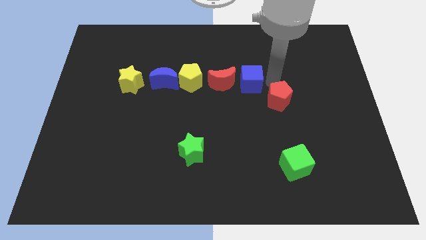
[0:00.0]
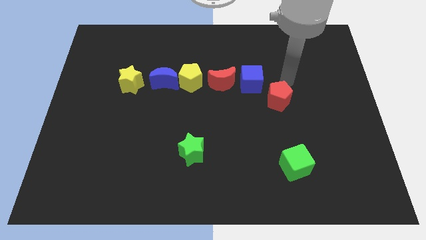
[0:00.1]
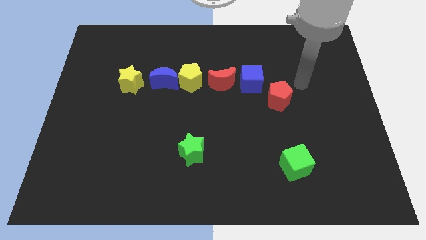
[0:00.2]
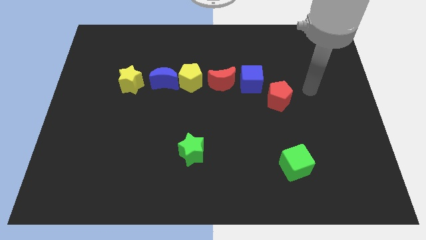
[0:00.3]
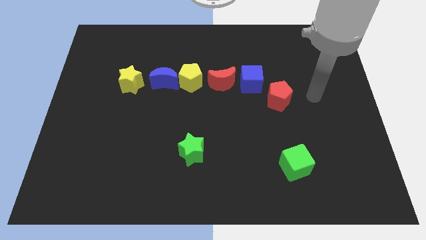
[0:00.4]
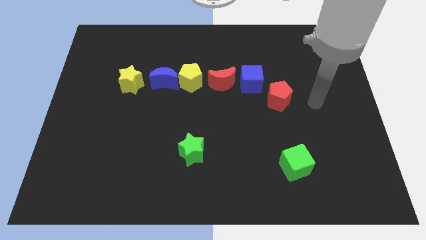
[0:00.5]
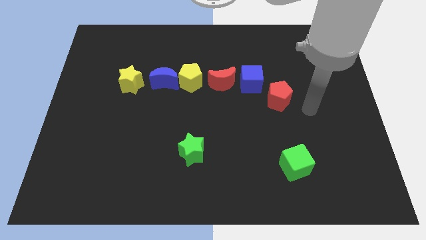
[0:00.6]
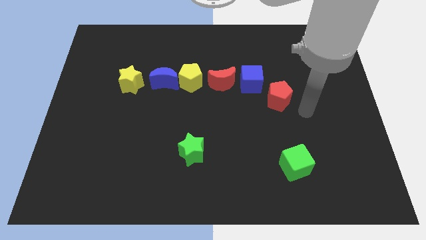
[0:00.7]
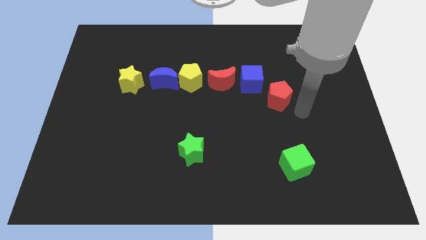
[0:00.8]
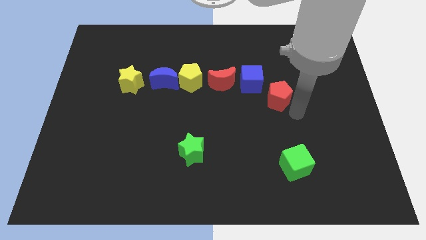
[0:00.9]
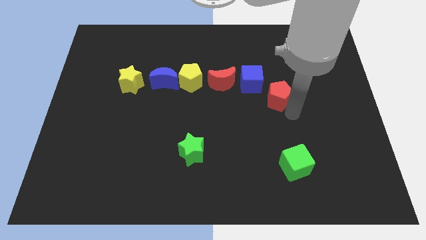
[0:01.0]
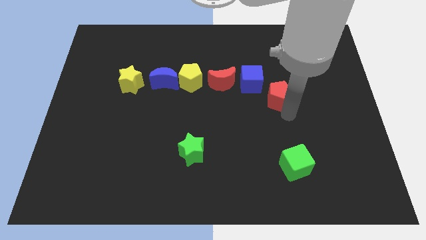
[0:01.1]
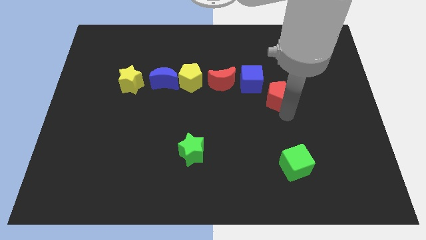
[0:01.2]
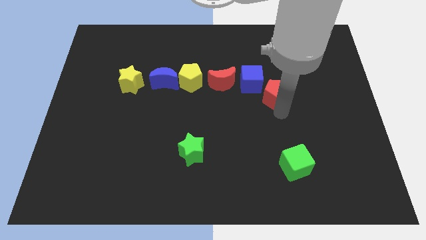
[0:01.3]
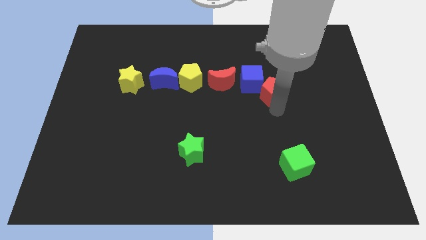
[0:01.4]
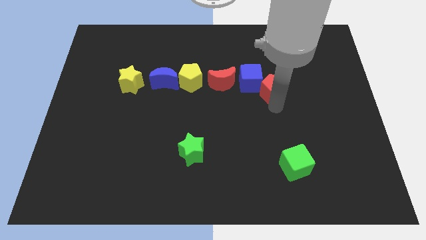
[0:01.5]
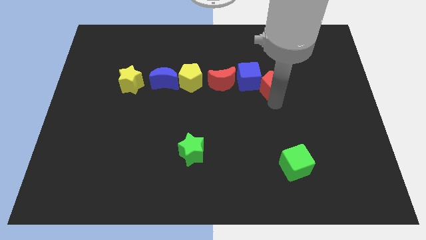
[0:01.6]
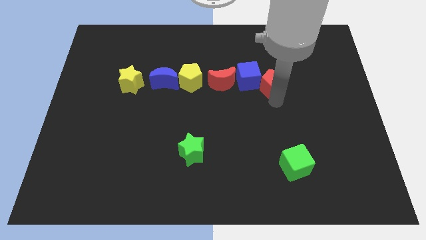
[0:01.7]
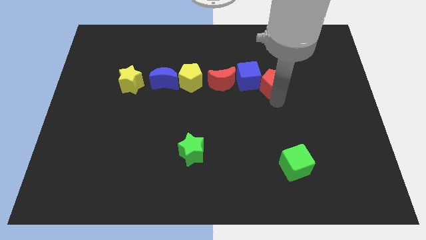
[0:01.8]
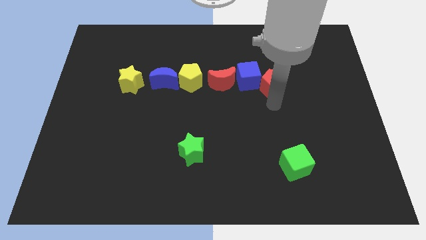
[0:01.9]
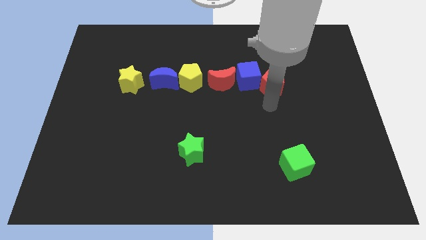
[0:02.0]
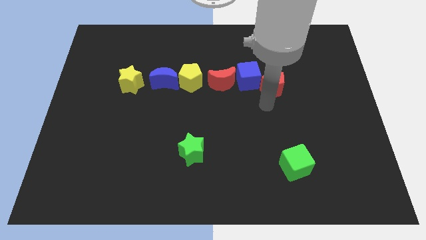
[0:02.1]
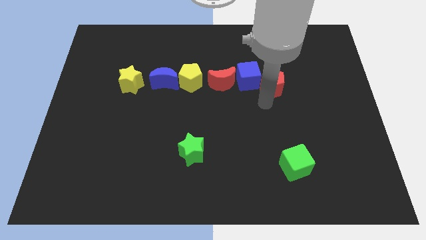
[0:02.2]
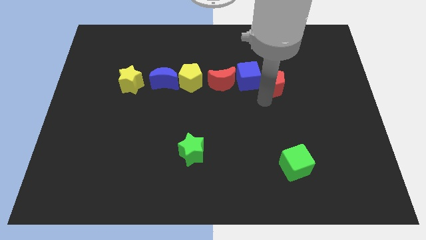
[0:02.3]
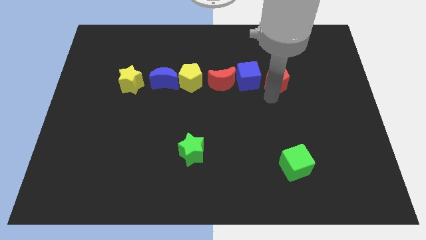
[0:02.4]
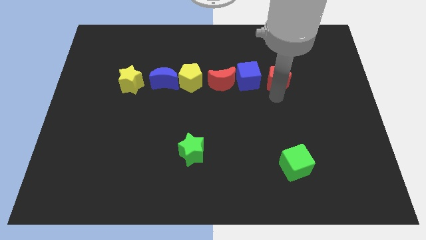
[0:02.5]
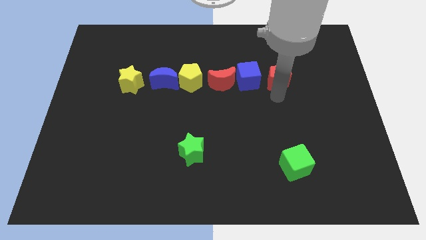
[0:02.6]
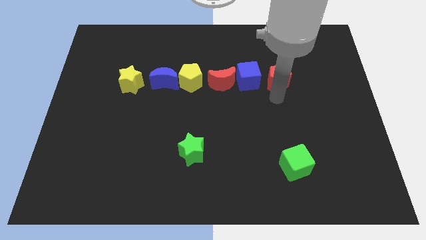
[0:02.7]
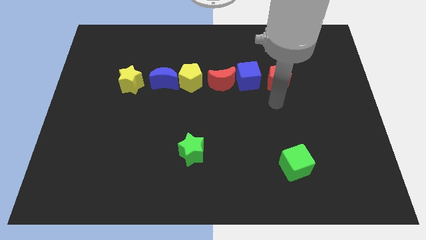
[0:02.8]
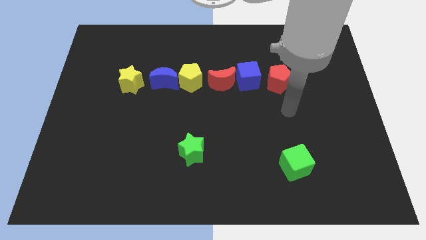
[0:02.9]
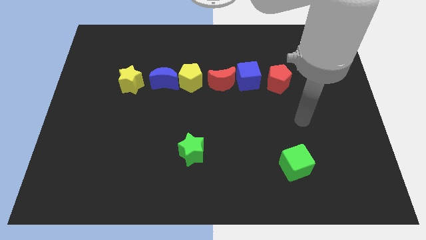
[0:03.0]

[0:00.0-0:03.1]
add the red pentagon to the row of blocks

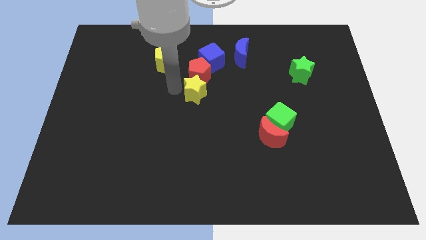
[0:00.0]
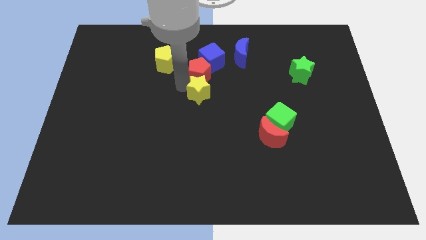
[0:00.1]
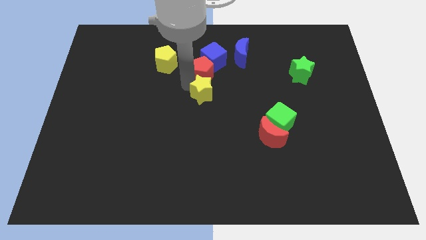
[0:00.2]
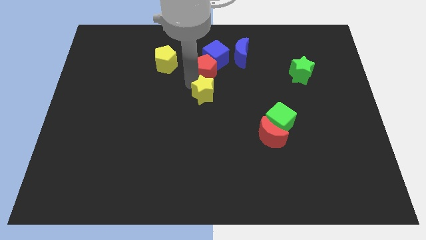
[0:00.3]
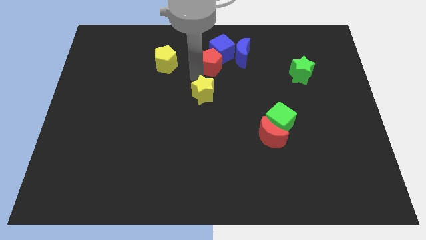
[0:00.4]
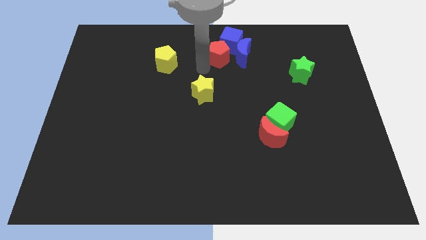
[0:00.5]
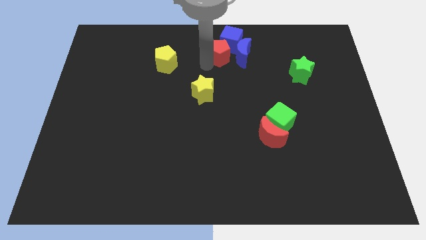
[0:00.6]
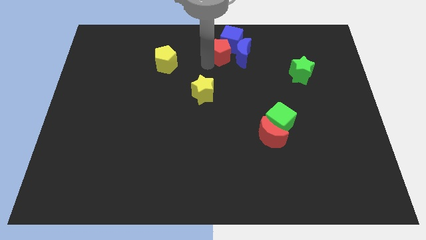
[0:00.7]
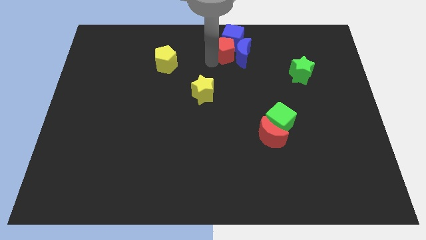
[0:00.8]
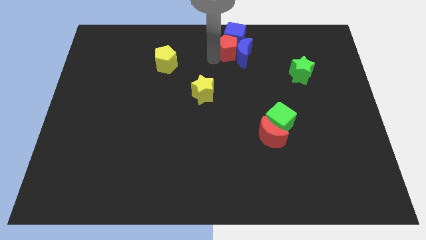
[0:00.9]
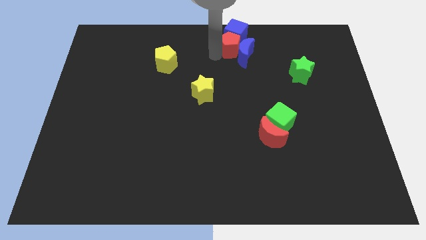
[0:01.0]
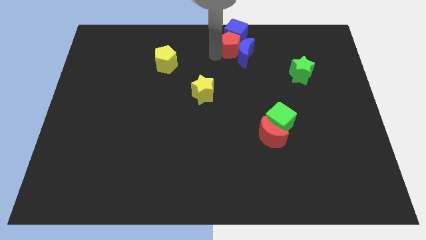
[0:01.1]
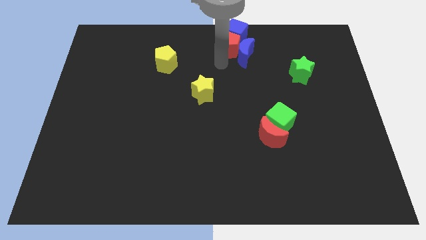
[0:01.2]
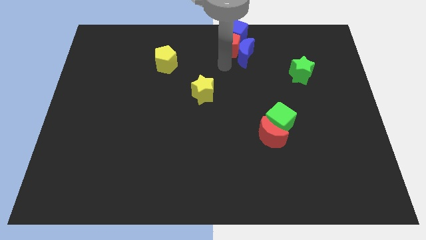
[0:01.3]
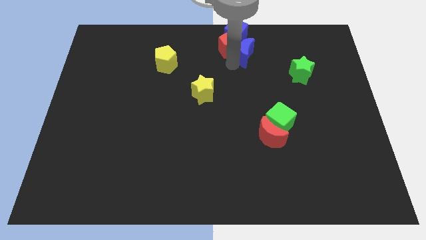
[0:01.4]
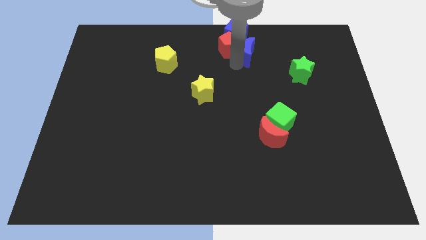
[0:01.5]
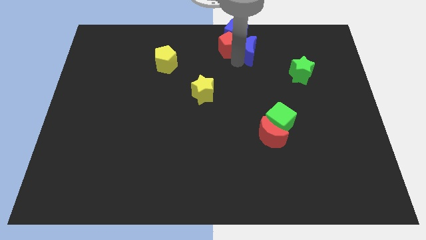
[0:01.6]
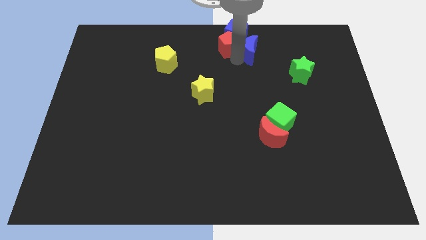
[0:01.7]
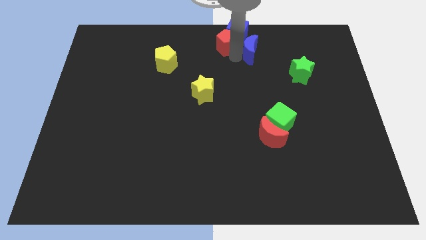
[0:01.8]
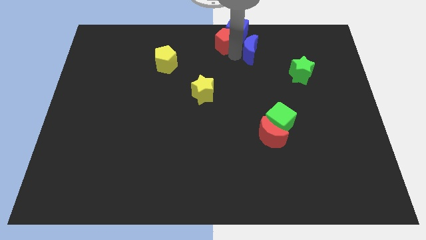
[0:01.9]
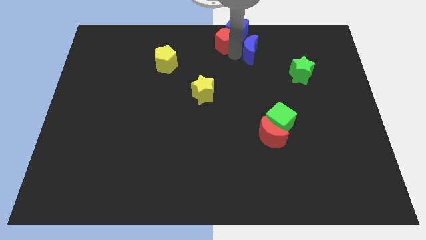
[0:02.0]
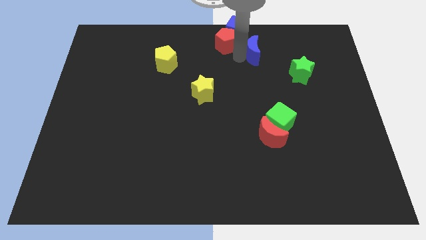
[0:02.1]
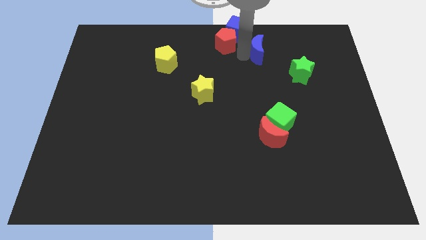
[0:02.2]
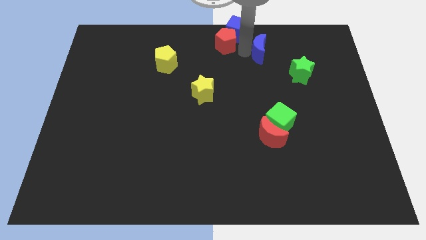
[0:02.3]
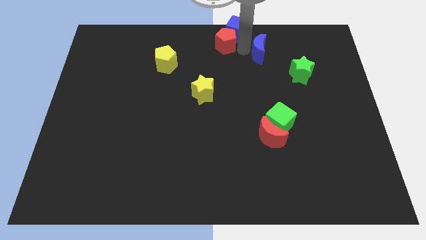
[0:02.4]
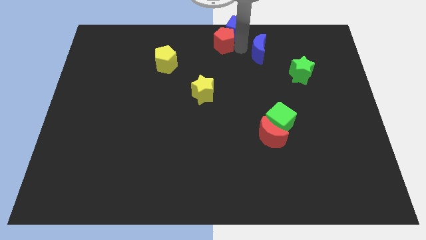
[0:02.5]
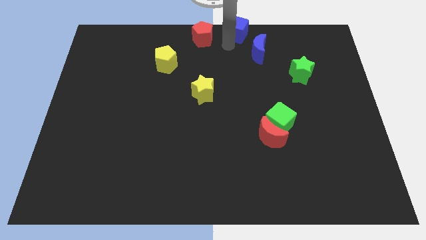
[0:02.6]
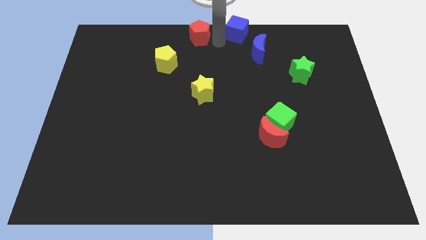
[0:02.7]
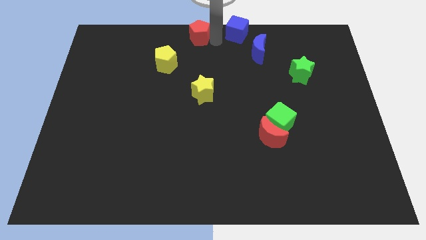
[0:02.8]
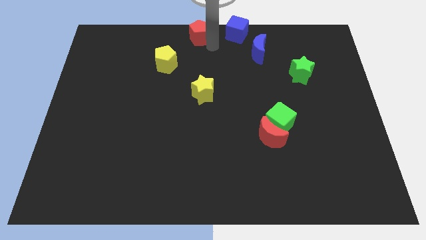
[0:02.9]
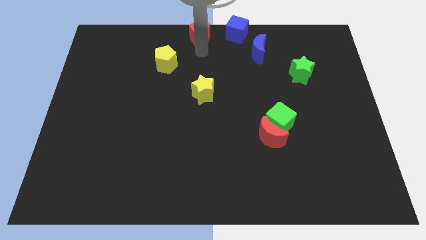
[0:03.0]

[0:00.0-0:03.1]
separate red pentagon and blue cube from the yellow star

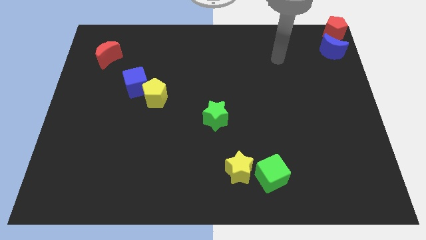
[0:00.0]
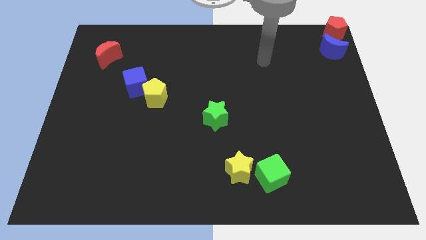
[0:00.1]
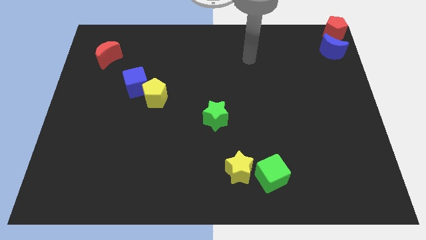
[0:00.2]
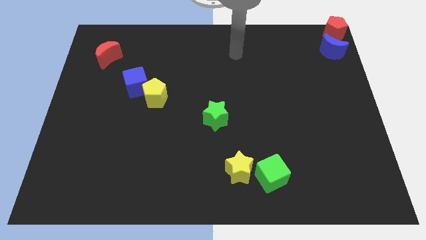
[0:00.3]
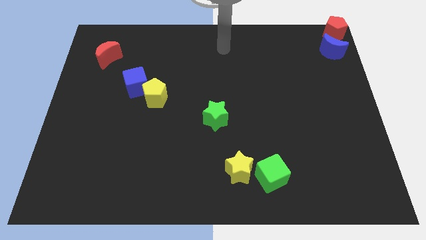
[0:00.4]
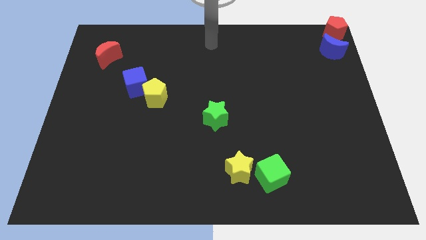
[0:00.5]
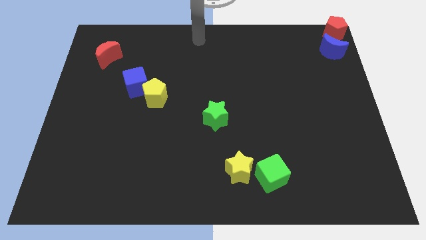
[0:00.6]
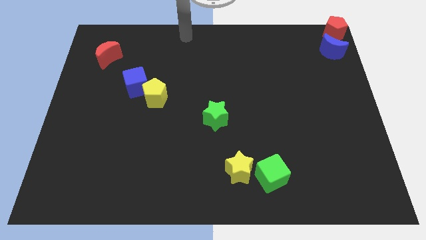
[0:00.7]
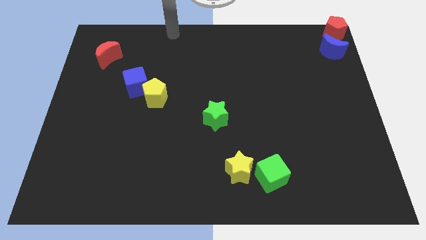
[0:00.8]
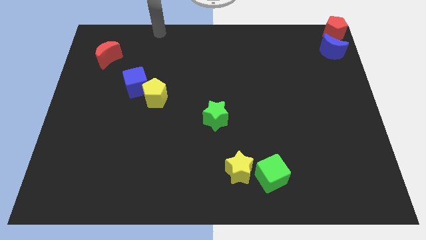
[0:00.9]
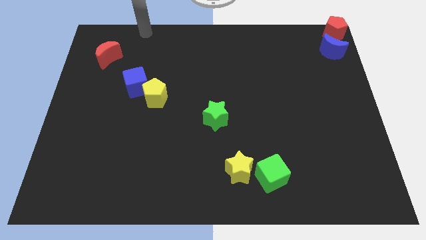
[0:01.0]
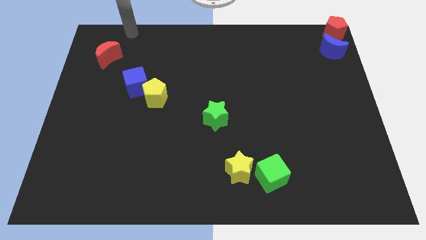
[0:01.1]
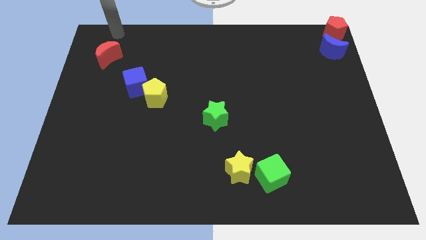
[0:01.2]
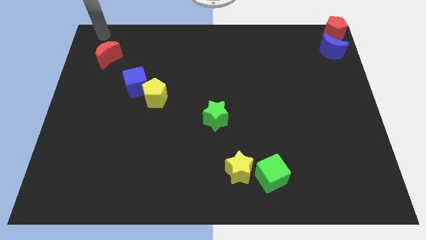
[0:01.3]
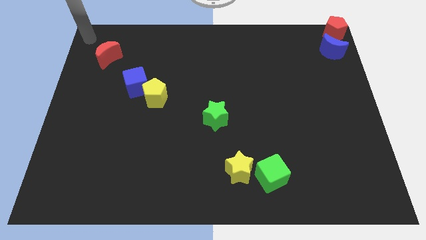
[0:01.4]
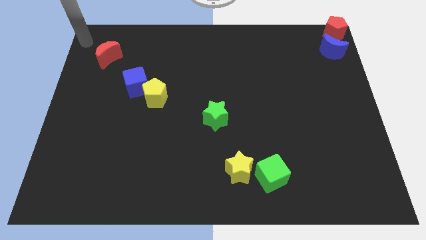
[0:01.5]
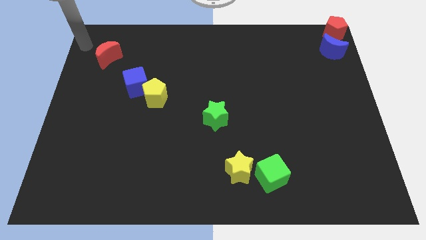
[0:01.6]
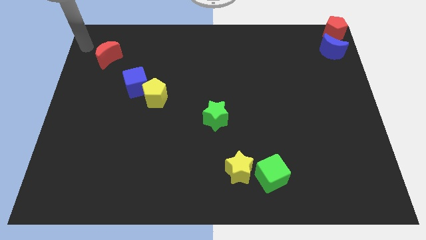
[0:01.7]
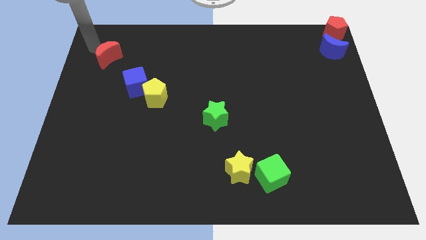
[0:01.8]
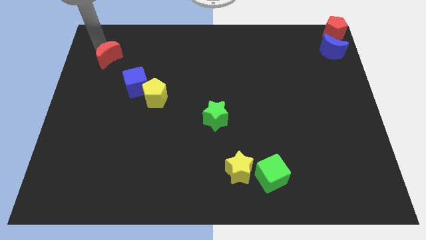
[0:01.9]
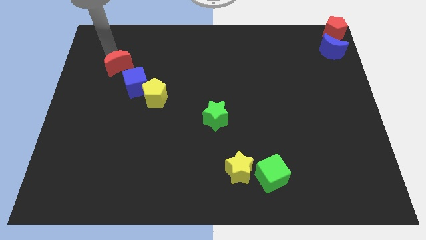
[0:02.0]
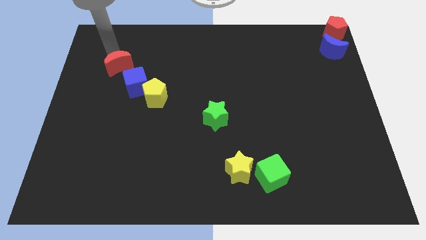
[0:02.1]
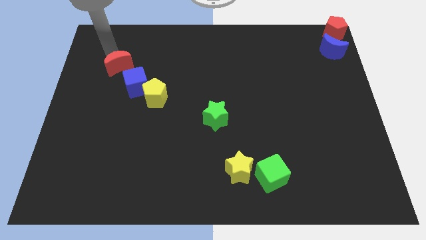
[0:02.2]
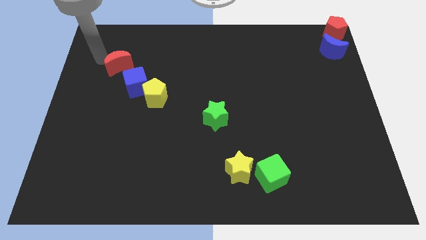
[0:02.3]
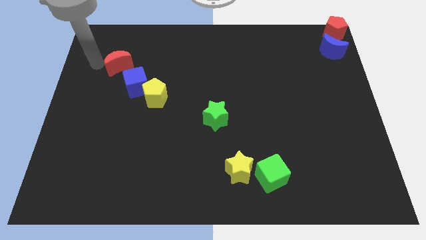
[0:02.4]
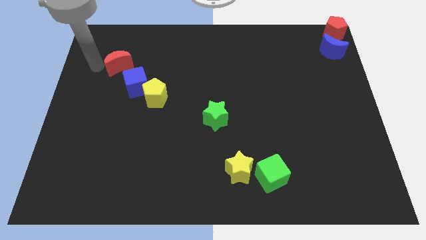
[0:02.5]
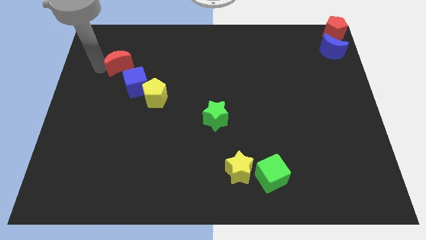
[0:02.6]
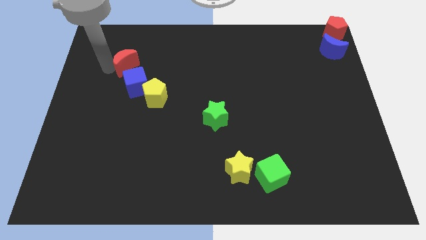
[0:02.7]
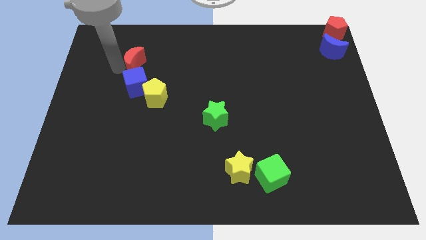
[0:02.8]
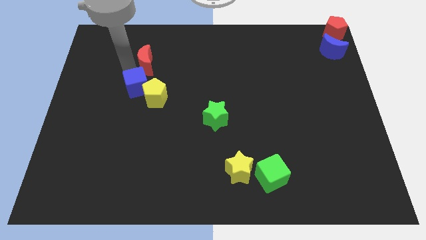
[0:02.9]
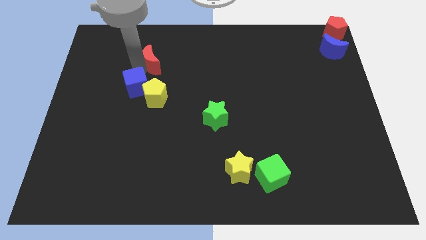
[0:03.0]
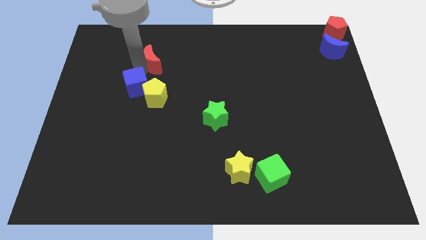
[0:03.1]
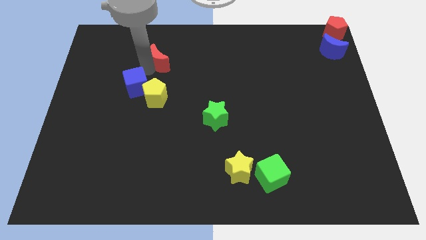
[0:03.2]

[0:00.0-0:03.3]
place your arm in between the blue cube and red moon
